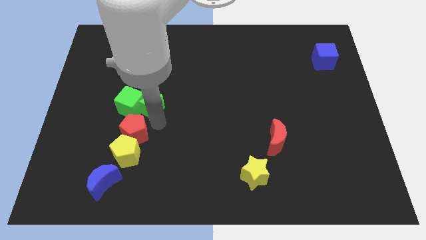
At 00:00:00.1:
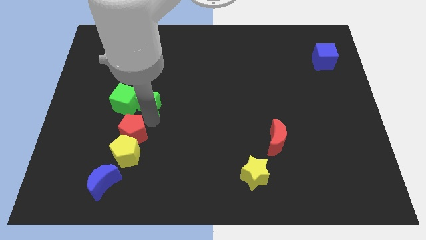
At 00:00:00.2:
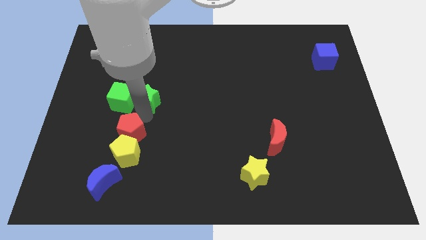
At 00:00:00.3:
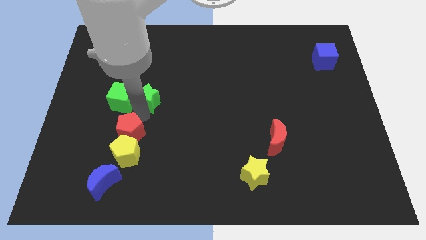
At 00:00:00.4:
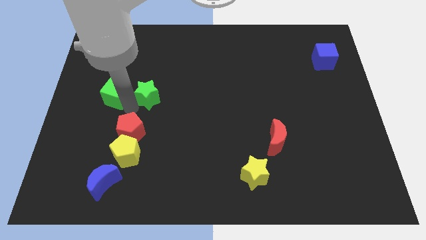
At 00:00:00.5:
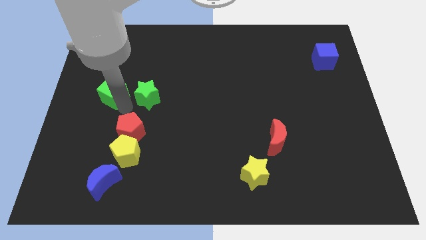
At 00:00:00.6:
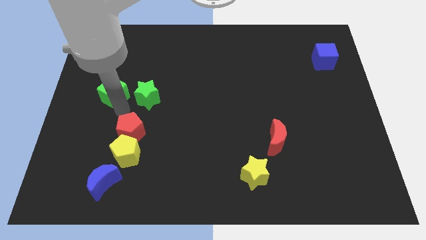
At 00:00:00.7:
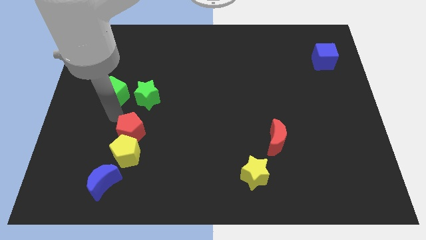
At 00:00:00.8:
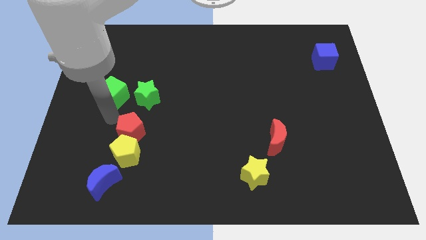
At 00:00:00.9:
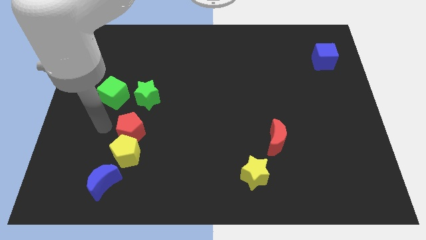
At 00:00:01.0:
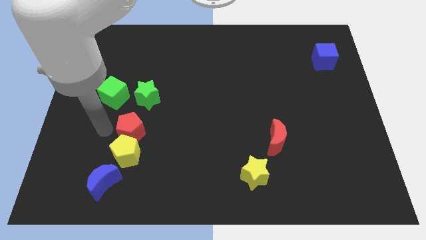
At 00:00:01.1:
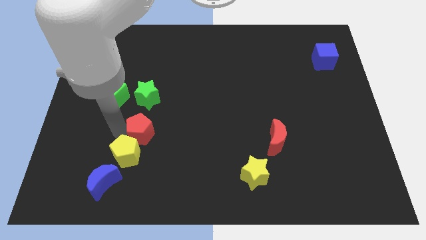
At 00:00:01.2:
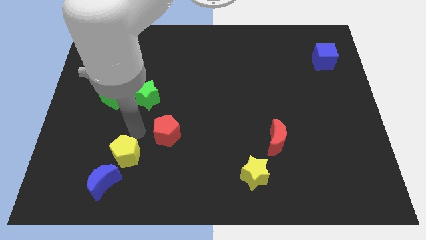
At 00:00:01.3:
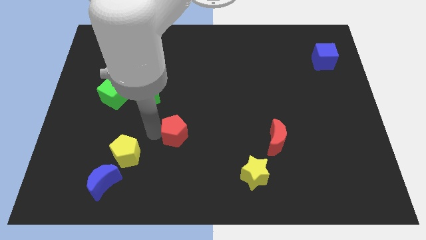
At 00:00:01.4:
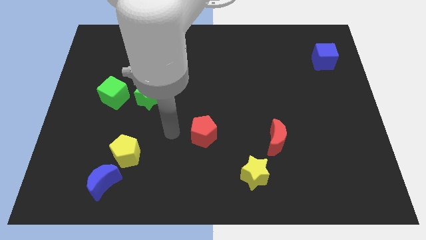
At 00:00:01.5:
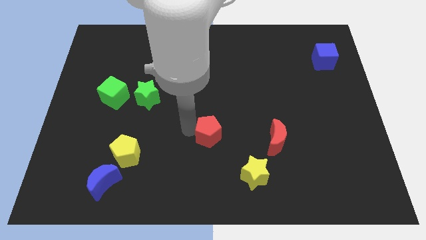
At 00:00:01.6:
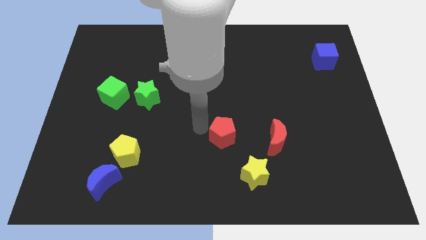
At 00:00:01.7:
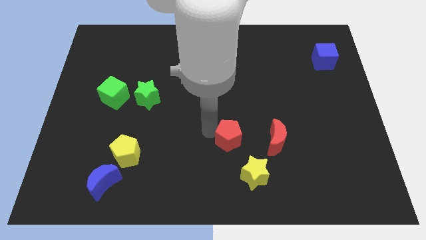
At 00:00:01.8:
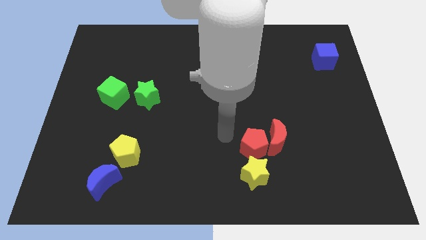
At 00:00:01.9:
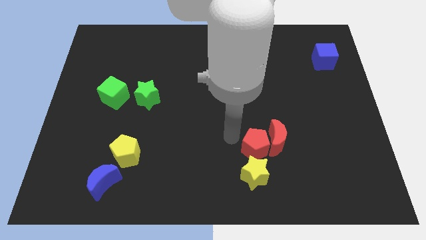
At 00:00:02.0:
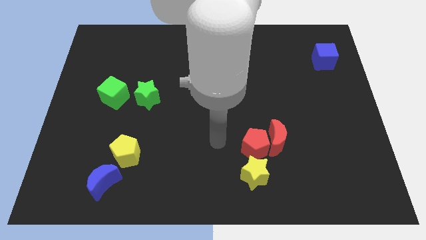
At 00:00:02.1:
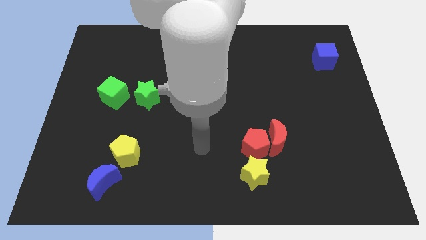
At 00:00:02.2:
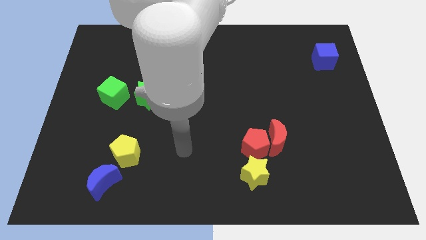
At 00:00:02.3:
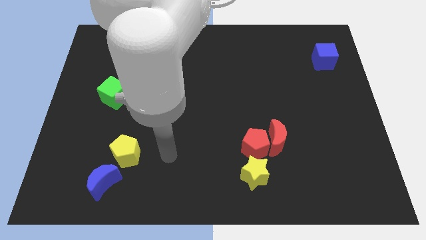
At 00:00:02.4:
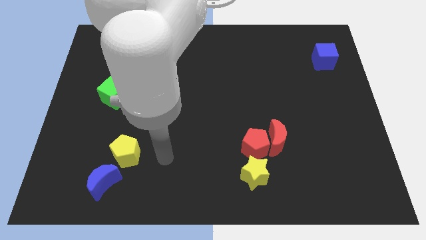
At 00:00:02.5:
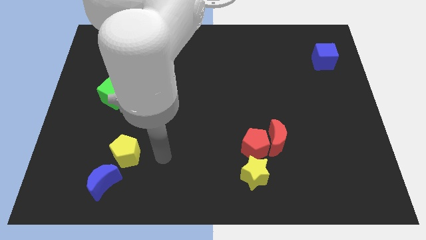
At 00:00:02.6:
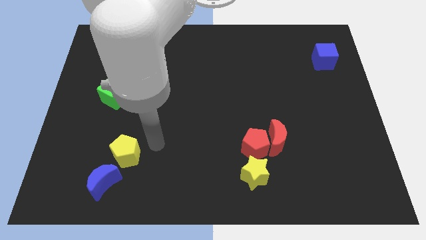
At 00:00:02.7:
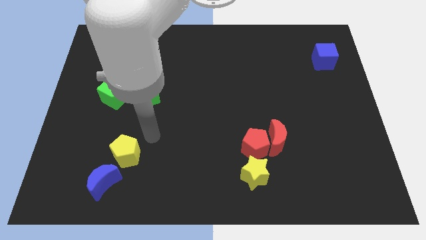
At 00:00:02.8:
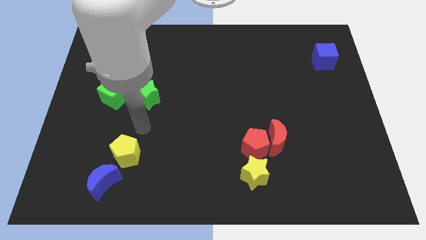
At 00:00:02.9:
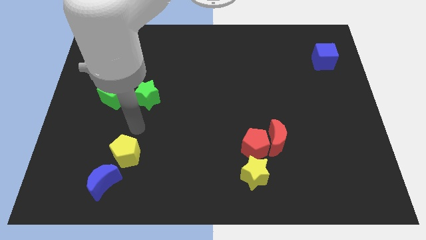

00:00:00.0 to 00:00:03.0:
put red pentagon above yellow star

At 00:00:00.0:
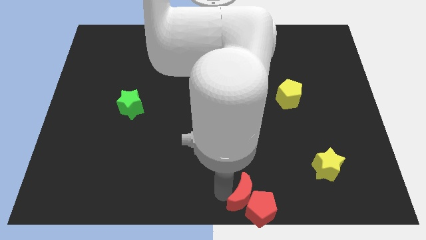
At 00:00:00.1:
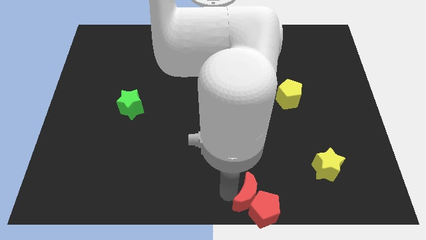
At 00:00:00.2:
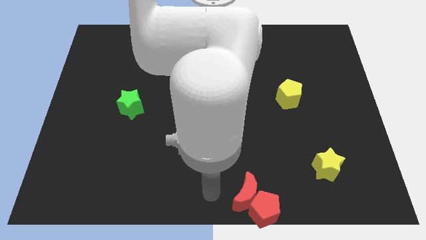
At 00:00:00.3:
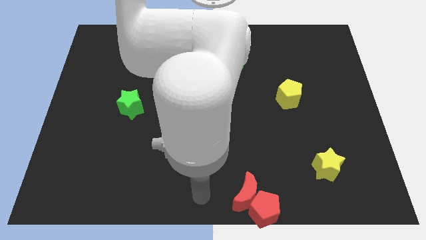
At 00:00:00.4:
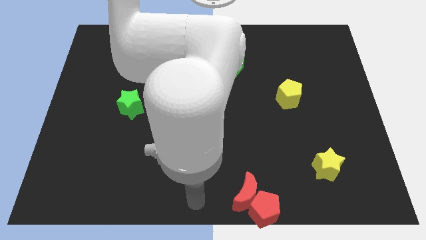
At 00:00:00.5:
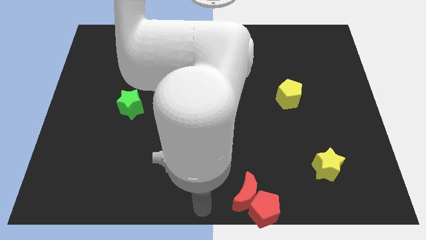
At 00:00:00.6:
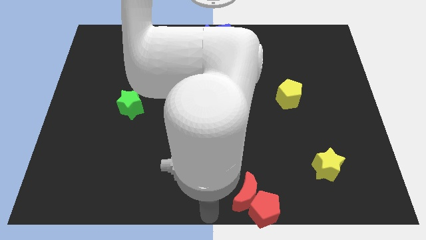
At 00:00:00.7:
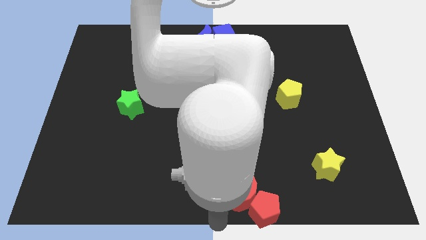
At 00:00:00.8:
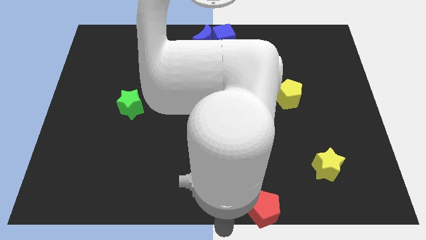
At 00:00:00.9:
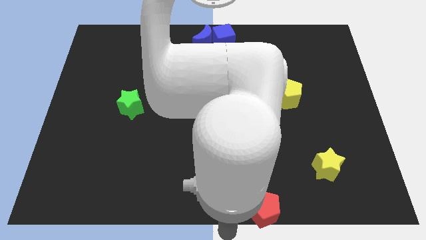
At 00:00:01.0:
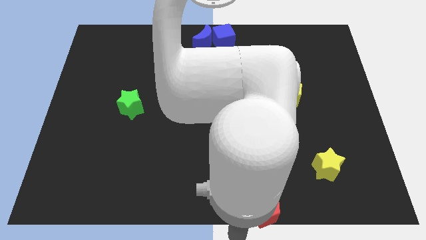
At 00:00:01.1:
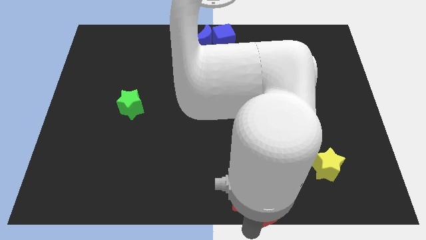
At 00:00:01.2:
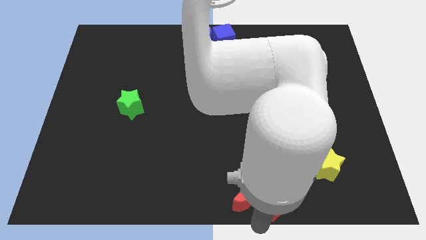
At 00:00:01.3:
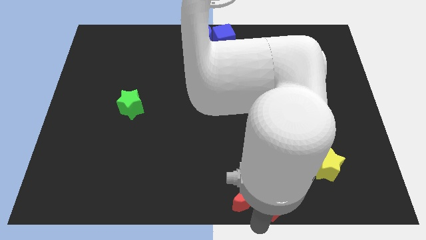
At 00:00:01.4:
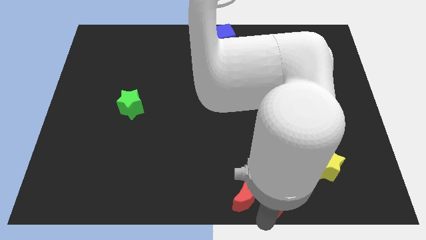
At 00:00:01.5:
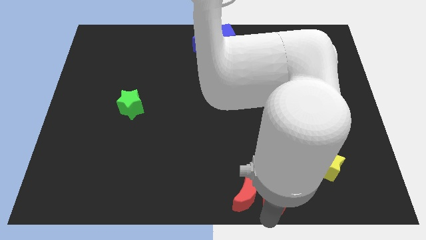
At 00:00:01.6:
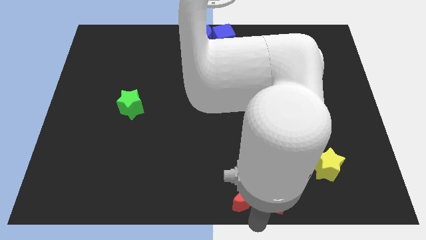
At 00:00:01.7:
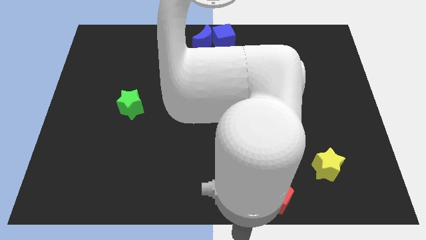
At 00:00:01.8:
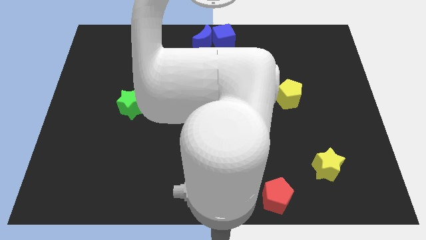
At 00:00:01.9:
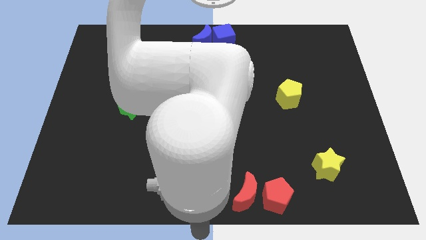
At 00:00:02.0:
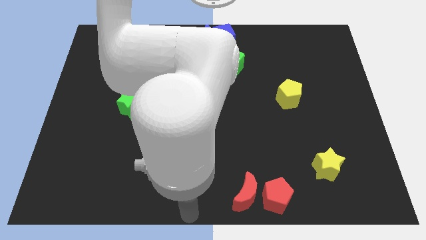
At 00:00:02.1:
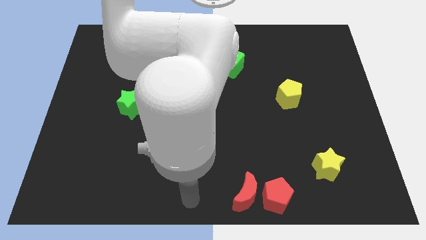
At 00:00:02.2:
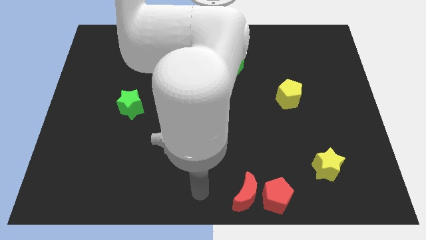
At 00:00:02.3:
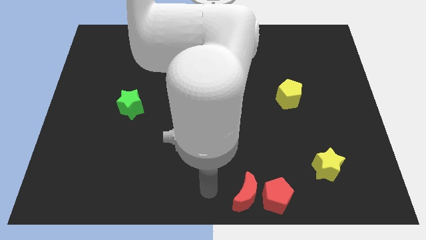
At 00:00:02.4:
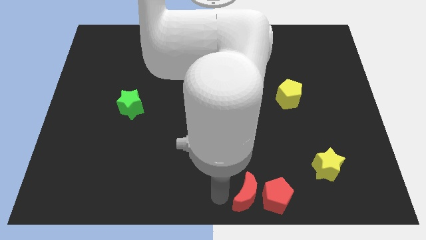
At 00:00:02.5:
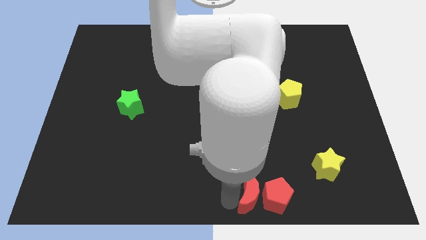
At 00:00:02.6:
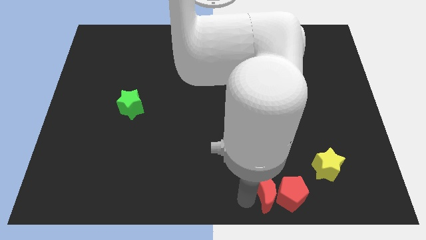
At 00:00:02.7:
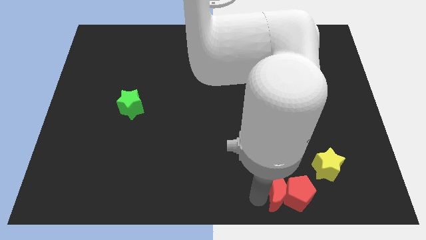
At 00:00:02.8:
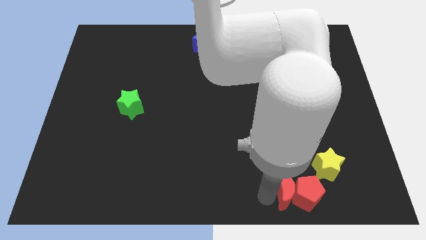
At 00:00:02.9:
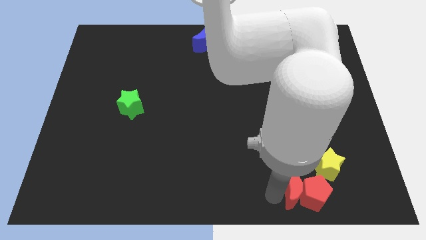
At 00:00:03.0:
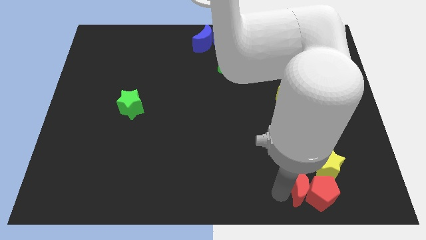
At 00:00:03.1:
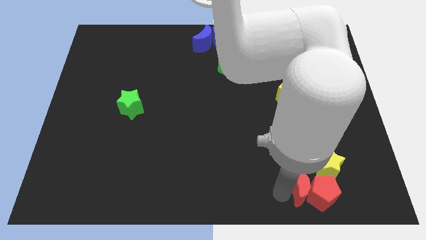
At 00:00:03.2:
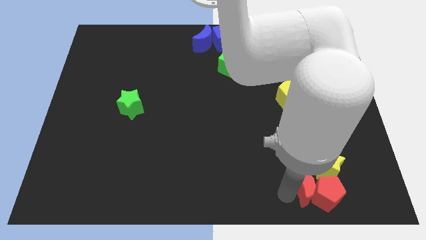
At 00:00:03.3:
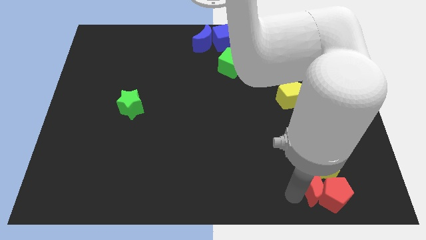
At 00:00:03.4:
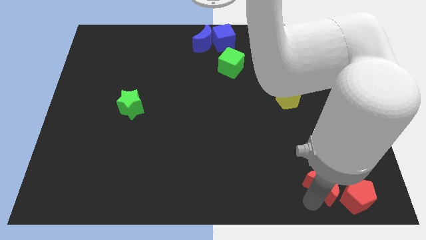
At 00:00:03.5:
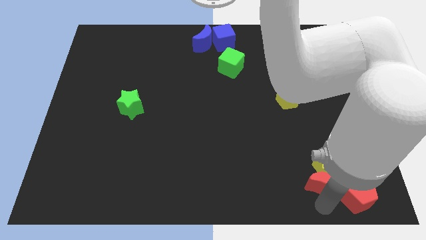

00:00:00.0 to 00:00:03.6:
place the red blocks below the yellow star

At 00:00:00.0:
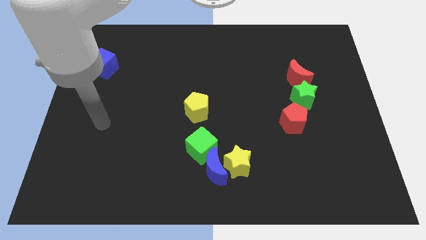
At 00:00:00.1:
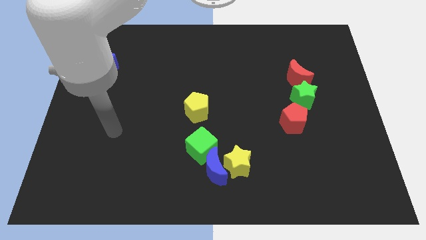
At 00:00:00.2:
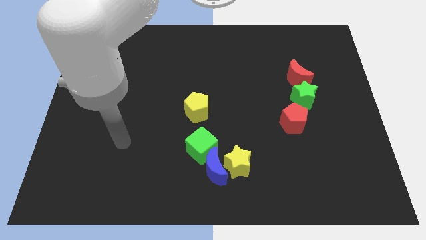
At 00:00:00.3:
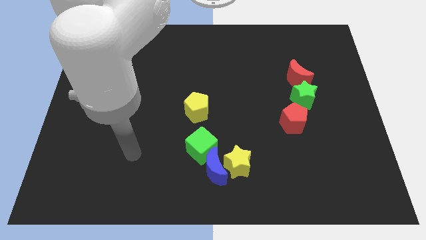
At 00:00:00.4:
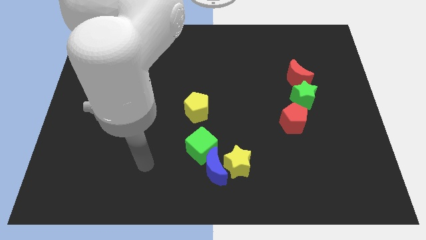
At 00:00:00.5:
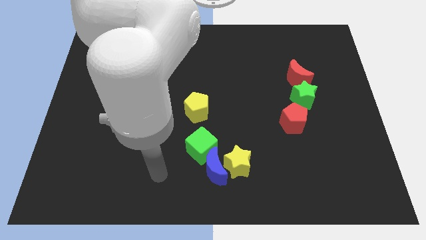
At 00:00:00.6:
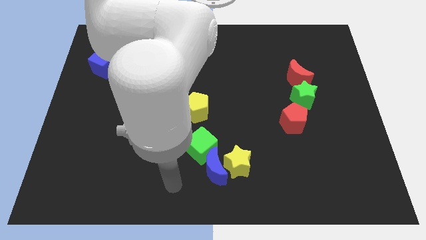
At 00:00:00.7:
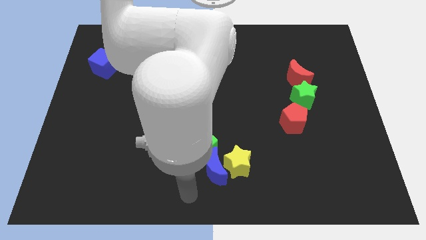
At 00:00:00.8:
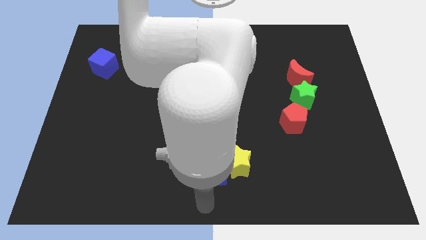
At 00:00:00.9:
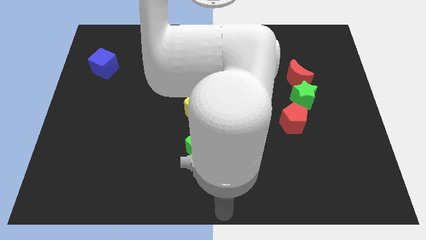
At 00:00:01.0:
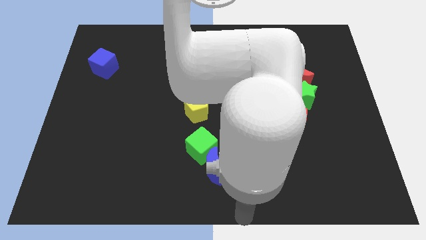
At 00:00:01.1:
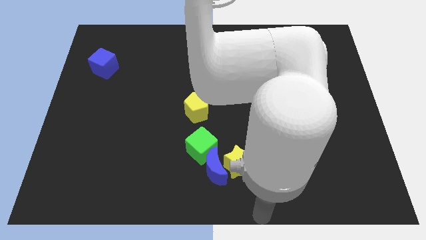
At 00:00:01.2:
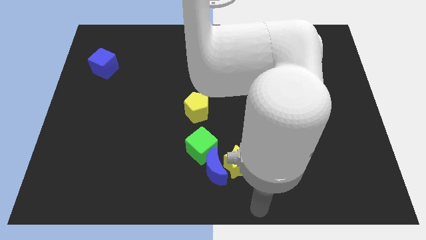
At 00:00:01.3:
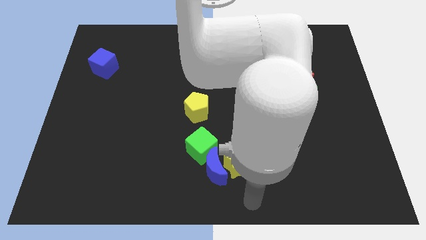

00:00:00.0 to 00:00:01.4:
put your hand vertically below the yellow star

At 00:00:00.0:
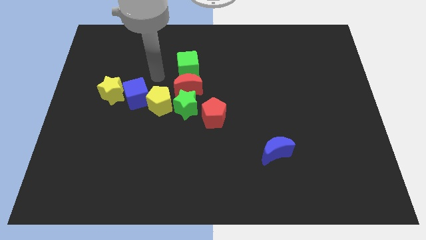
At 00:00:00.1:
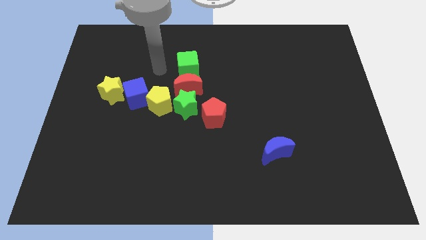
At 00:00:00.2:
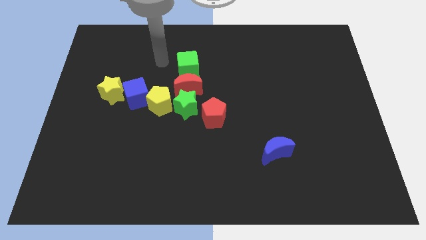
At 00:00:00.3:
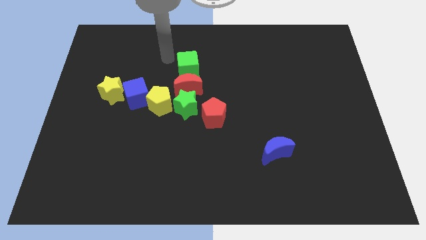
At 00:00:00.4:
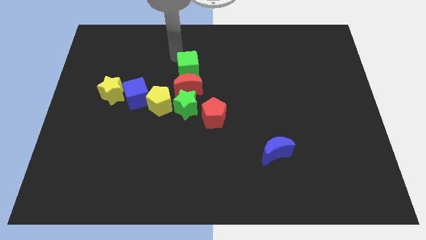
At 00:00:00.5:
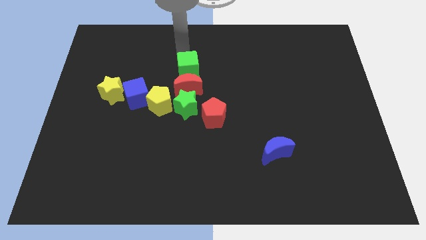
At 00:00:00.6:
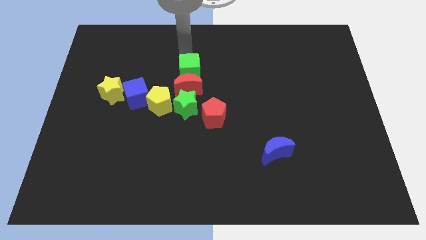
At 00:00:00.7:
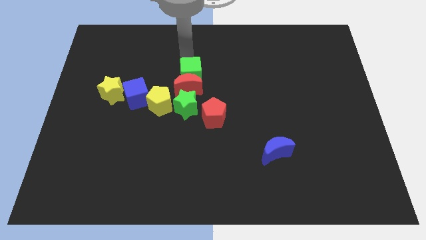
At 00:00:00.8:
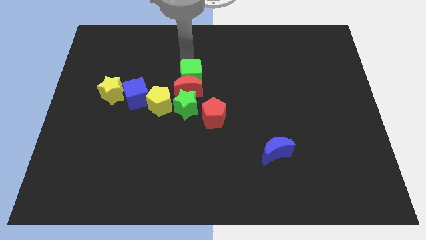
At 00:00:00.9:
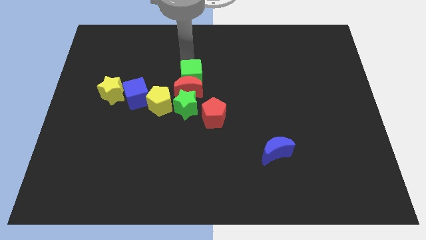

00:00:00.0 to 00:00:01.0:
push the green cube into red crescent
